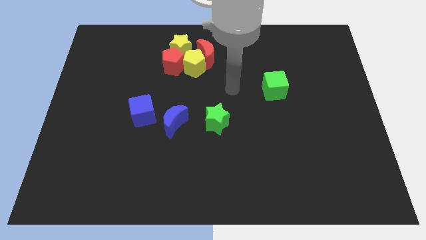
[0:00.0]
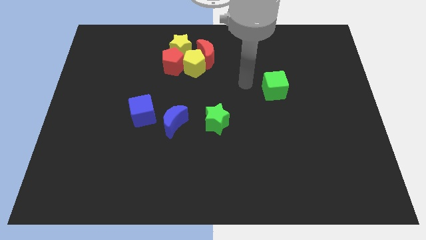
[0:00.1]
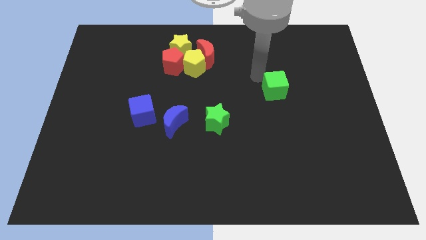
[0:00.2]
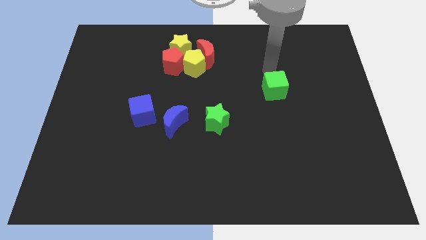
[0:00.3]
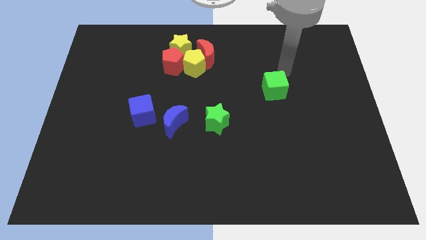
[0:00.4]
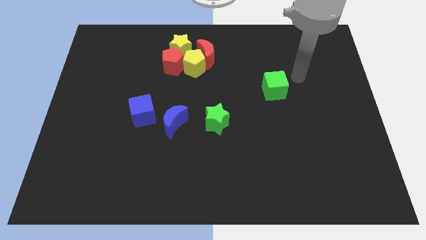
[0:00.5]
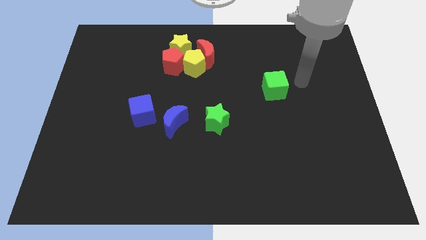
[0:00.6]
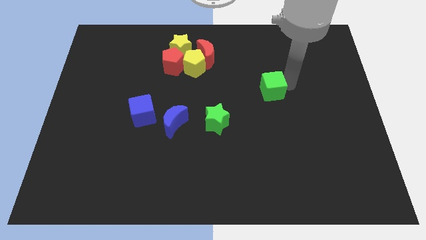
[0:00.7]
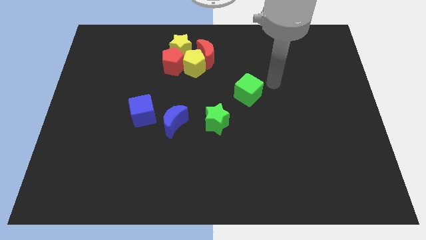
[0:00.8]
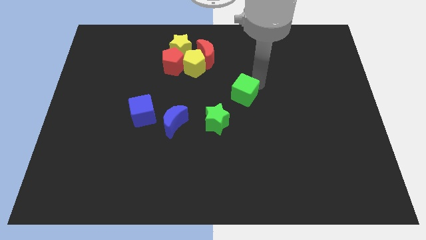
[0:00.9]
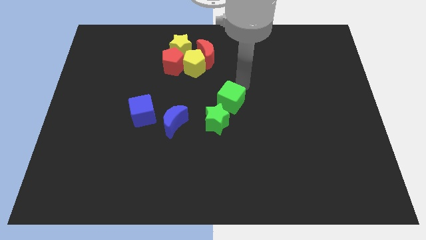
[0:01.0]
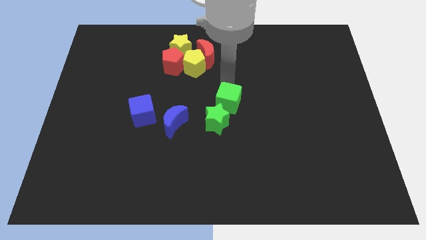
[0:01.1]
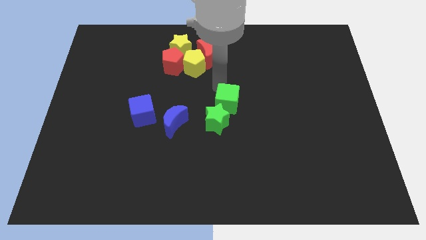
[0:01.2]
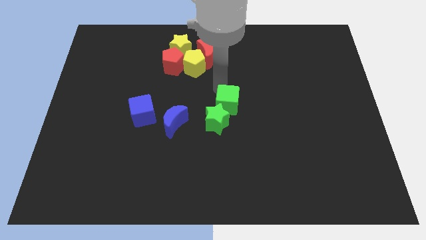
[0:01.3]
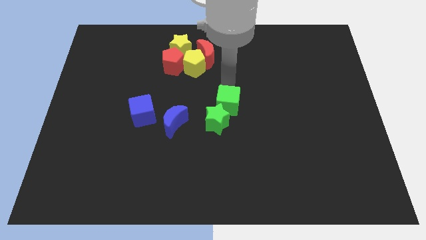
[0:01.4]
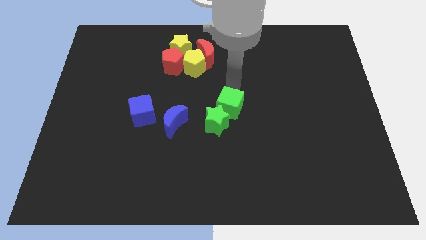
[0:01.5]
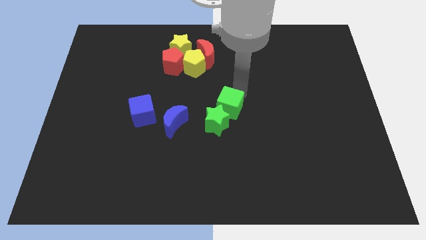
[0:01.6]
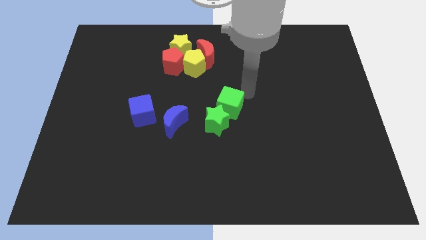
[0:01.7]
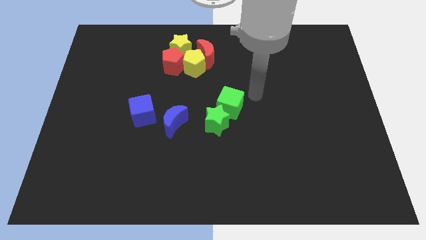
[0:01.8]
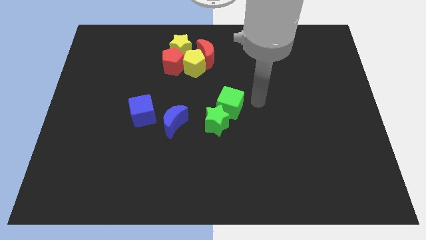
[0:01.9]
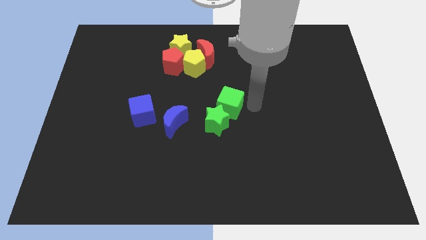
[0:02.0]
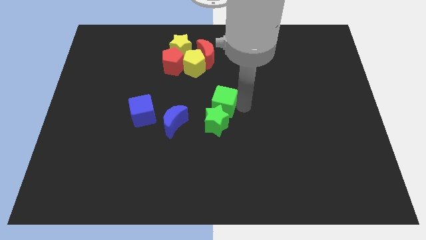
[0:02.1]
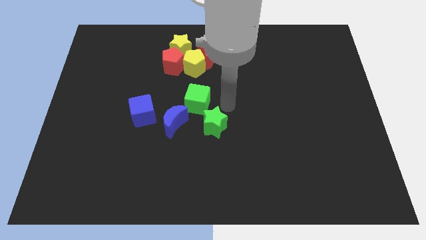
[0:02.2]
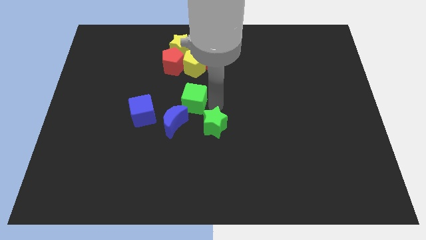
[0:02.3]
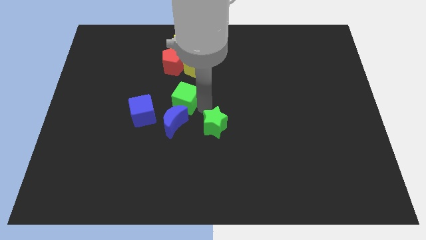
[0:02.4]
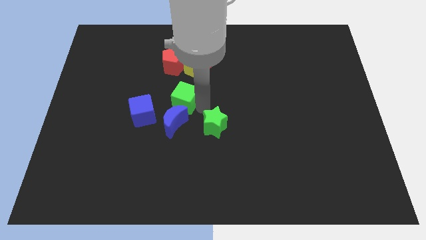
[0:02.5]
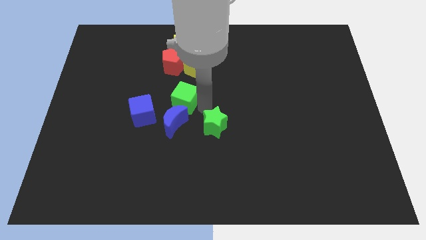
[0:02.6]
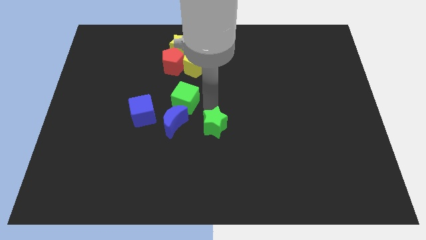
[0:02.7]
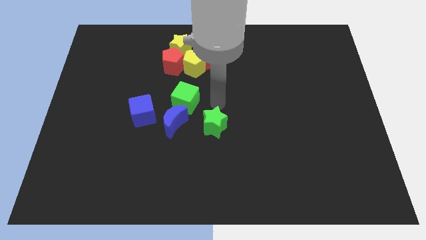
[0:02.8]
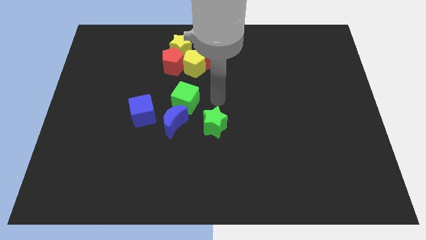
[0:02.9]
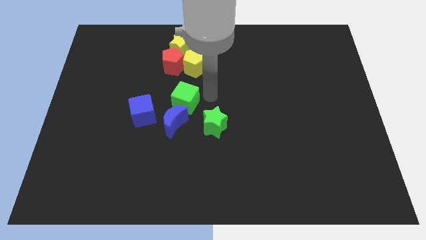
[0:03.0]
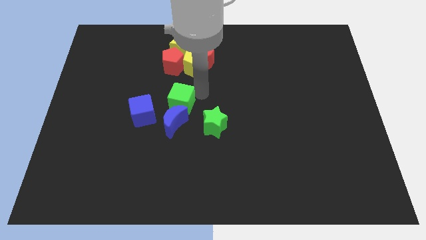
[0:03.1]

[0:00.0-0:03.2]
move the green cube to the top of the blue crescent

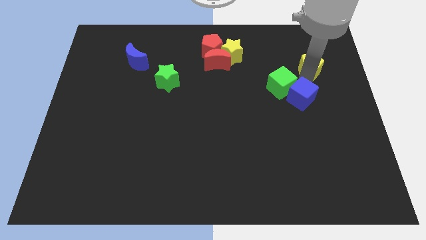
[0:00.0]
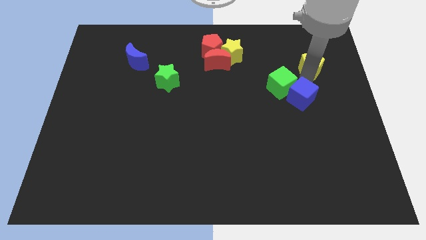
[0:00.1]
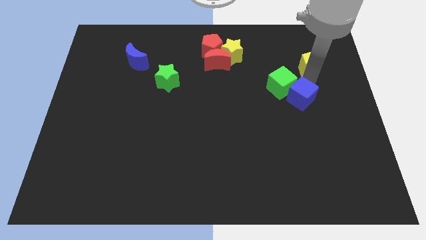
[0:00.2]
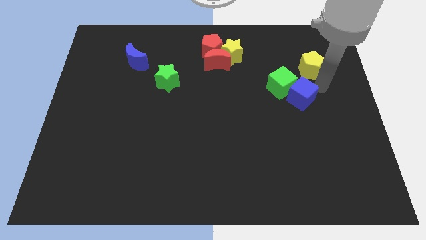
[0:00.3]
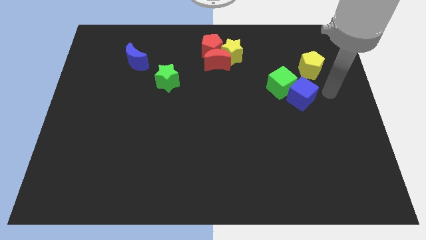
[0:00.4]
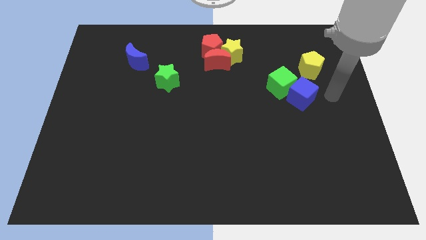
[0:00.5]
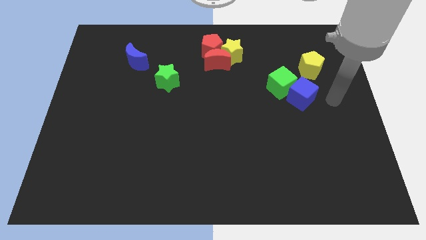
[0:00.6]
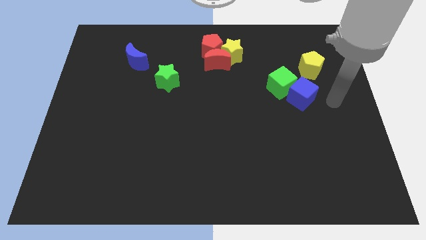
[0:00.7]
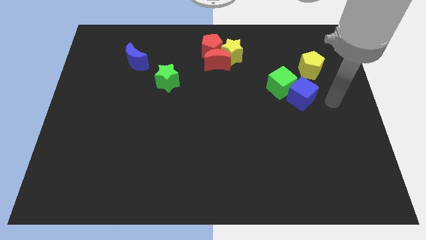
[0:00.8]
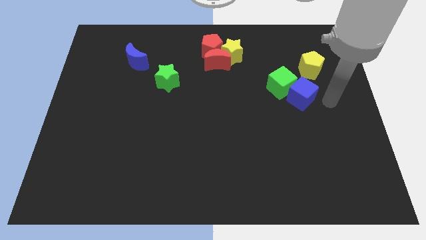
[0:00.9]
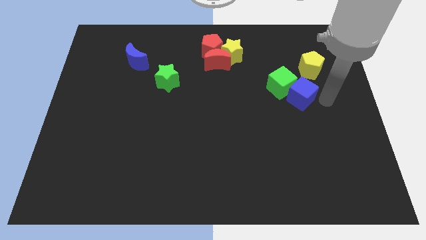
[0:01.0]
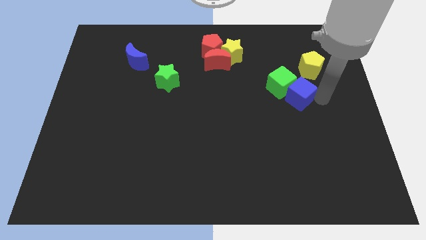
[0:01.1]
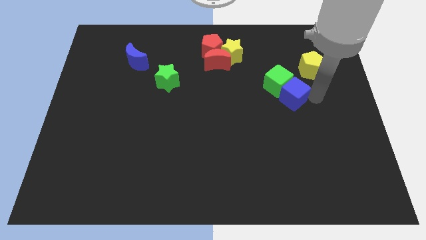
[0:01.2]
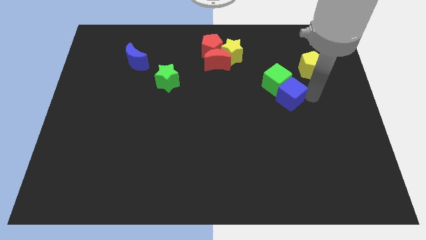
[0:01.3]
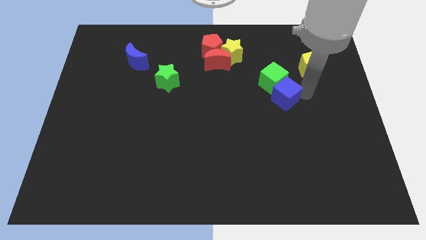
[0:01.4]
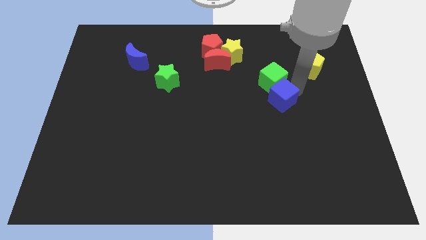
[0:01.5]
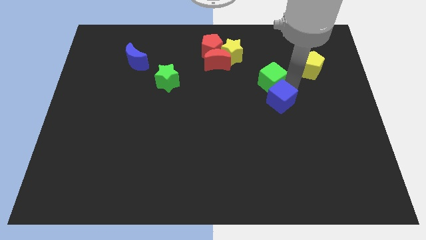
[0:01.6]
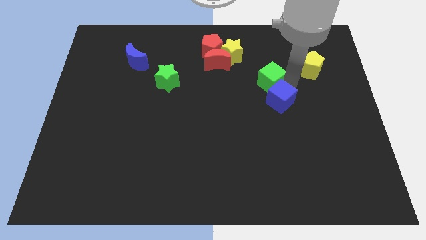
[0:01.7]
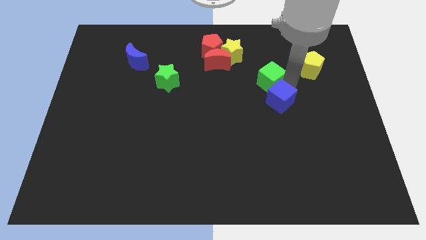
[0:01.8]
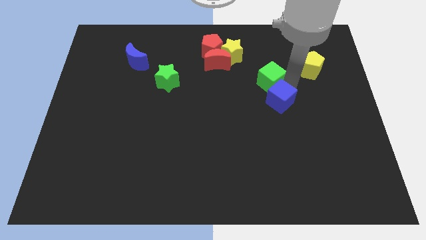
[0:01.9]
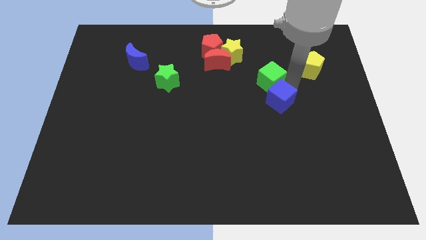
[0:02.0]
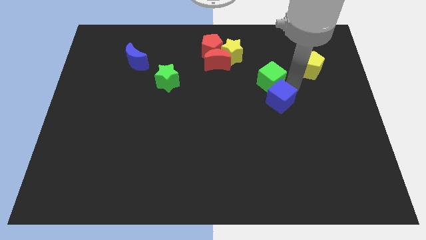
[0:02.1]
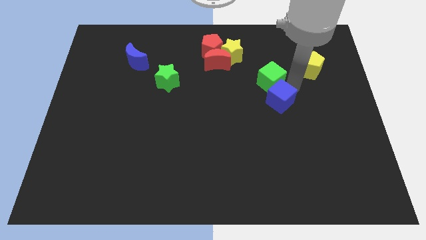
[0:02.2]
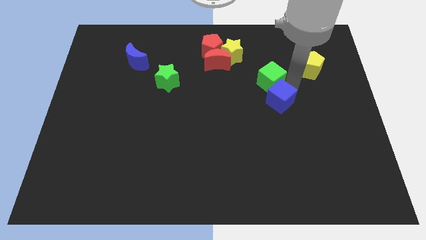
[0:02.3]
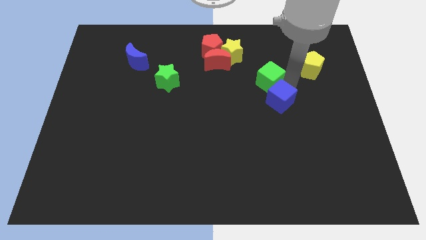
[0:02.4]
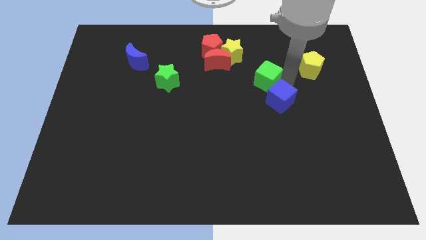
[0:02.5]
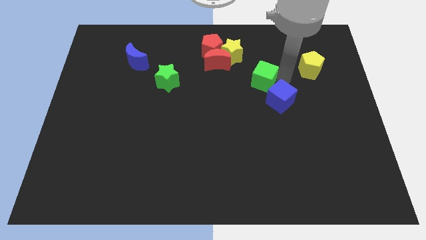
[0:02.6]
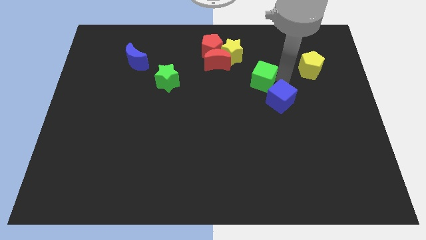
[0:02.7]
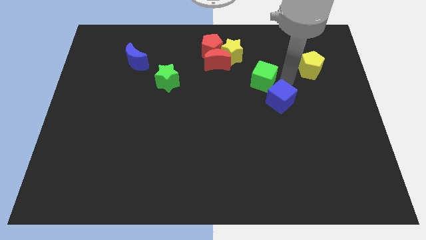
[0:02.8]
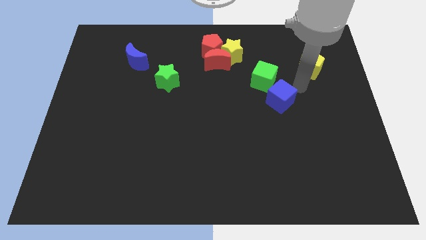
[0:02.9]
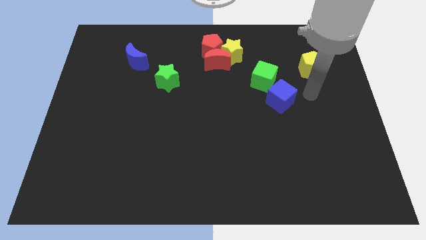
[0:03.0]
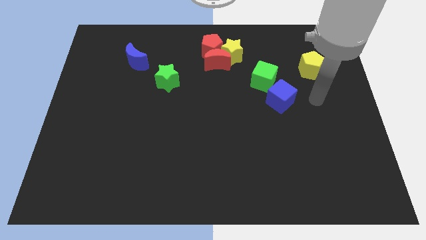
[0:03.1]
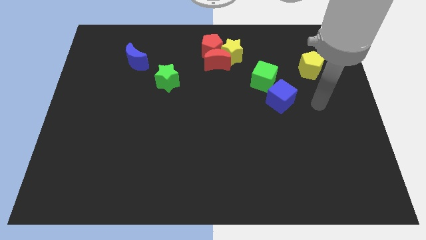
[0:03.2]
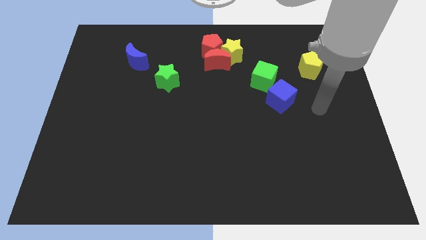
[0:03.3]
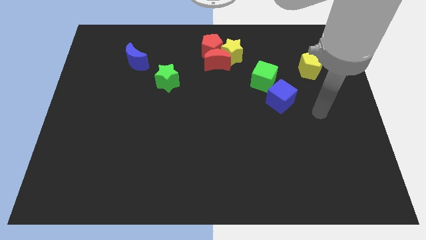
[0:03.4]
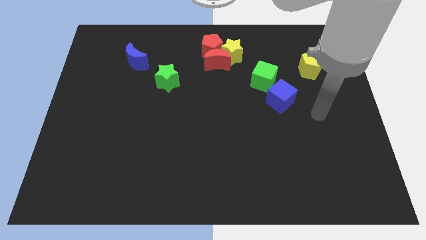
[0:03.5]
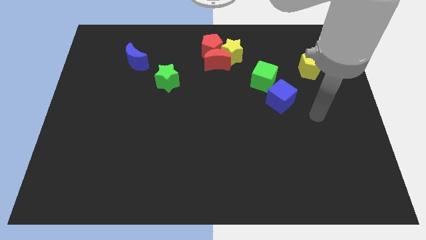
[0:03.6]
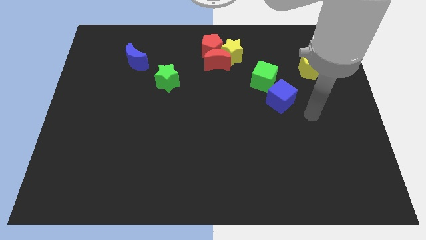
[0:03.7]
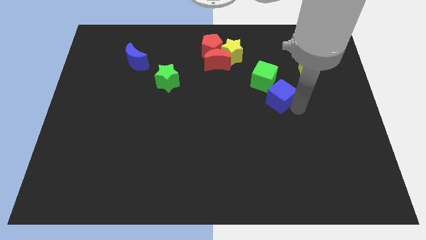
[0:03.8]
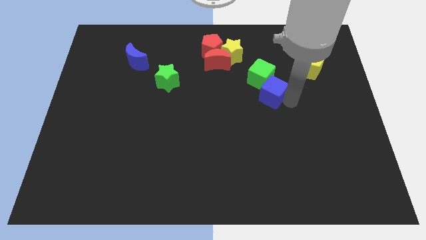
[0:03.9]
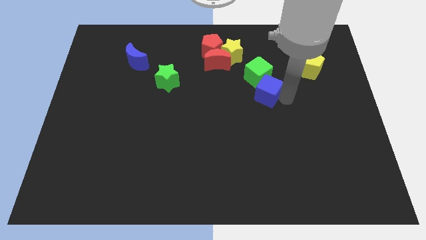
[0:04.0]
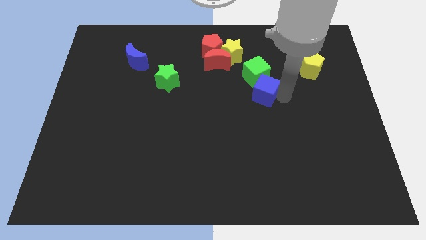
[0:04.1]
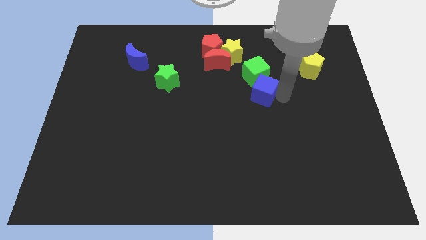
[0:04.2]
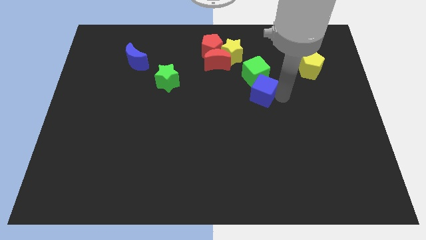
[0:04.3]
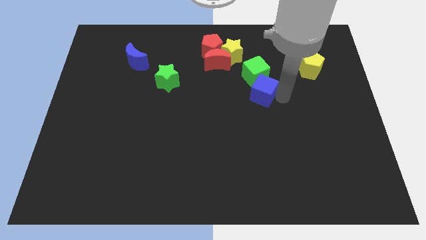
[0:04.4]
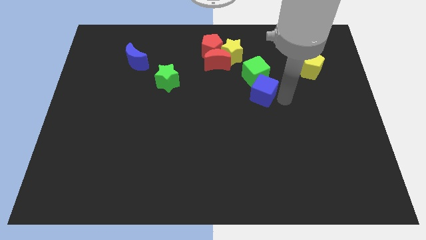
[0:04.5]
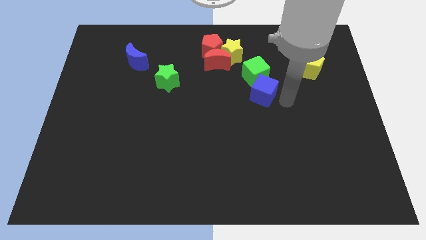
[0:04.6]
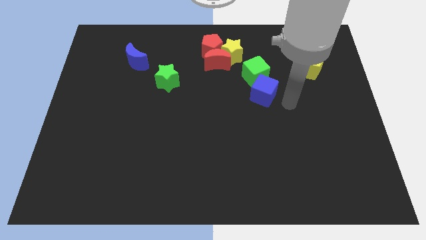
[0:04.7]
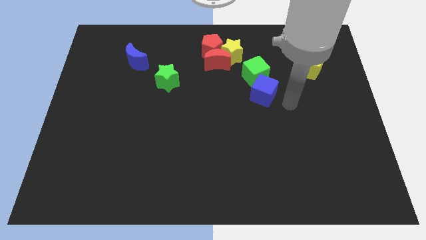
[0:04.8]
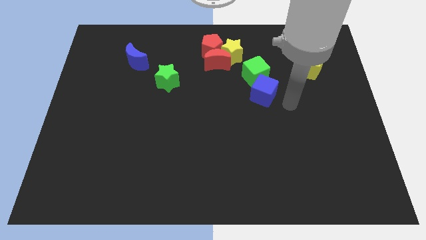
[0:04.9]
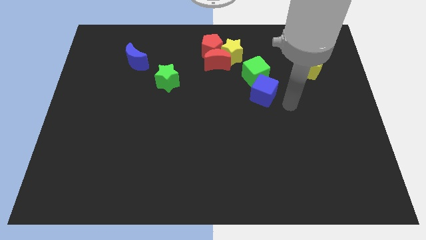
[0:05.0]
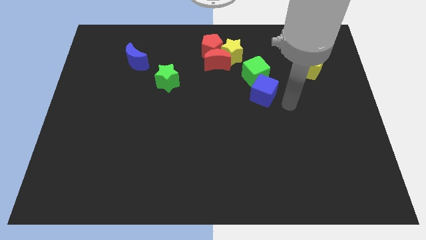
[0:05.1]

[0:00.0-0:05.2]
move both the cubes towards the red crescent

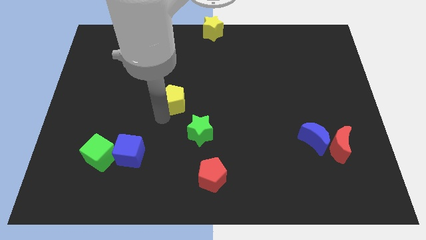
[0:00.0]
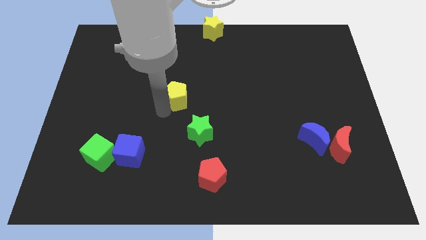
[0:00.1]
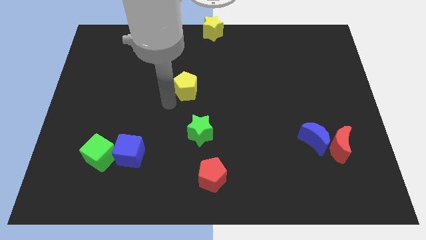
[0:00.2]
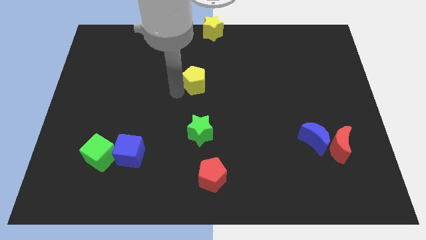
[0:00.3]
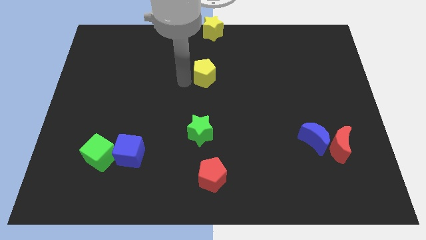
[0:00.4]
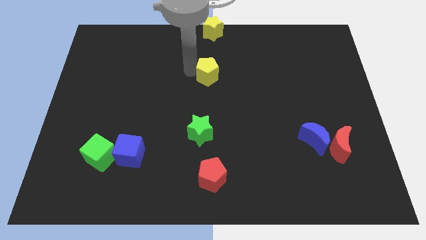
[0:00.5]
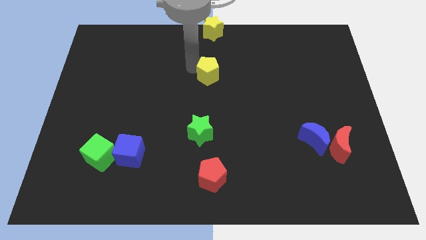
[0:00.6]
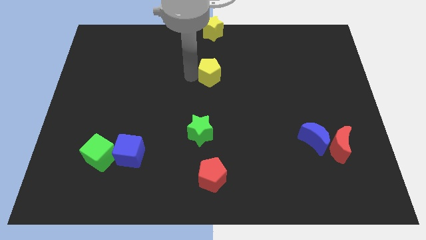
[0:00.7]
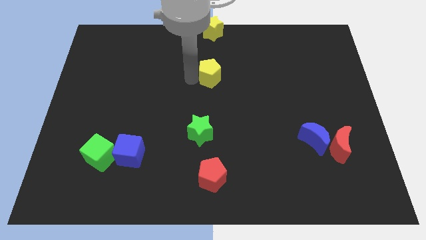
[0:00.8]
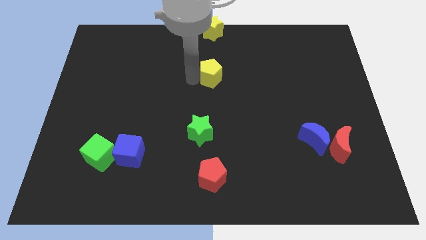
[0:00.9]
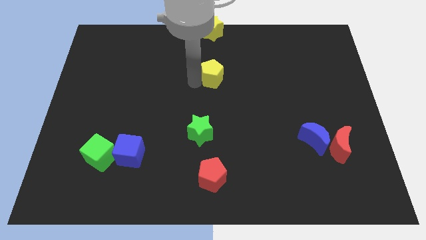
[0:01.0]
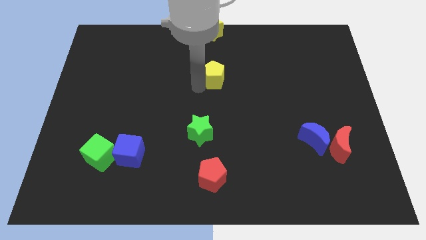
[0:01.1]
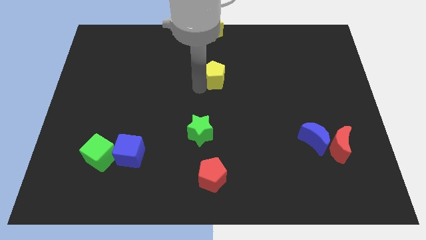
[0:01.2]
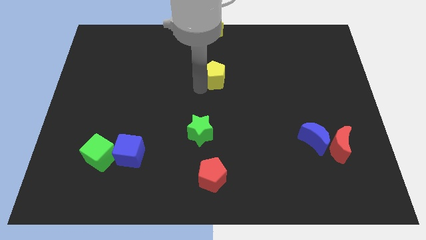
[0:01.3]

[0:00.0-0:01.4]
place the yellow pentagon slightly at the center of the board
